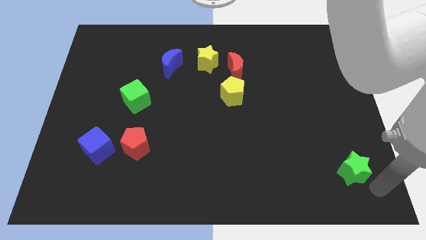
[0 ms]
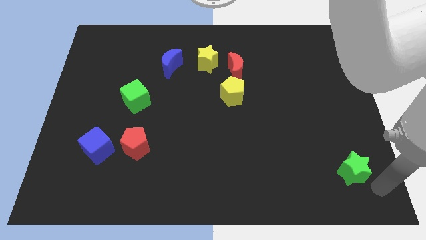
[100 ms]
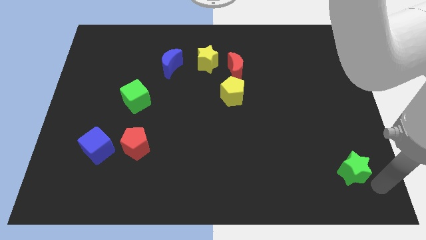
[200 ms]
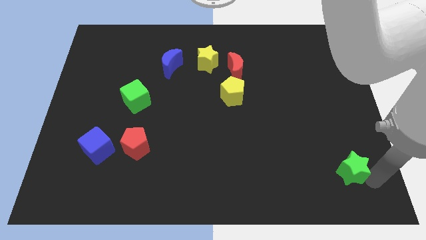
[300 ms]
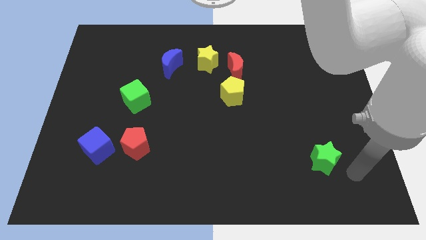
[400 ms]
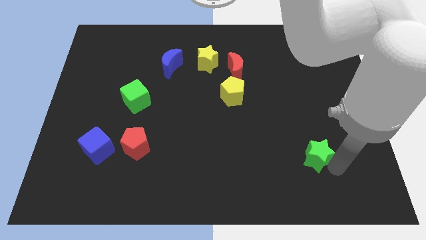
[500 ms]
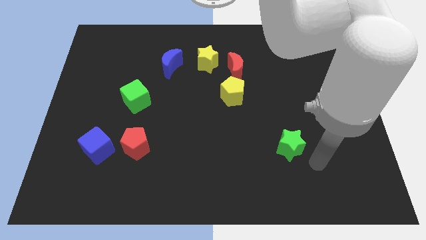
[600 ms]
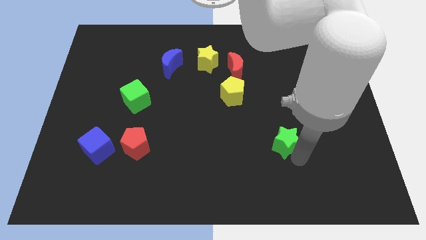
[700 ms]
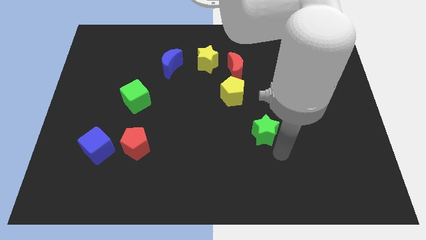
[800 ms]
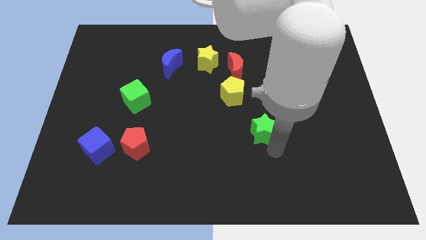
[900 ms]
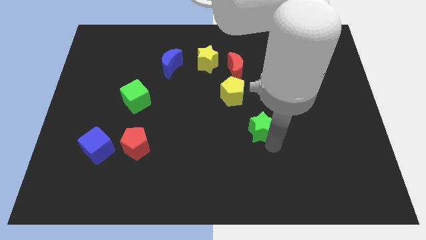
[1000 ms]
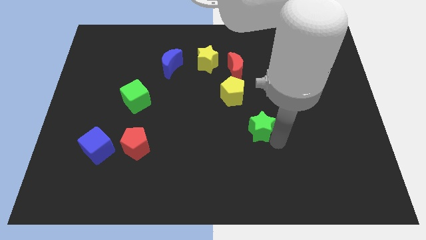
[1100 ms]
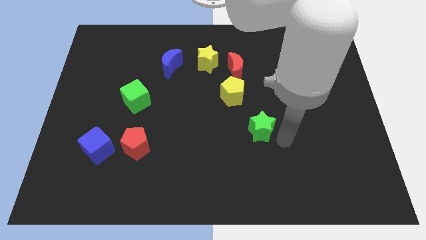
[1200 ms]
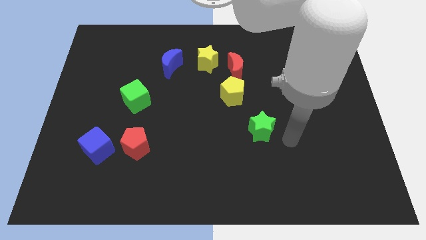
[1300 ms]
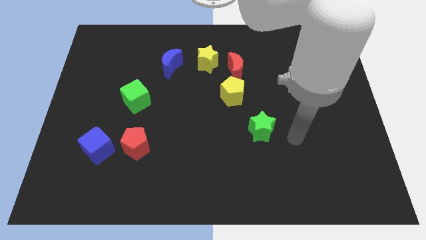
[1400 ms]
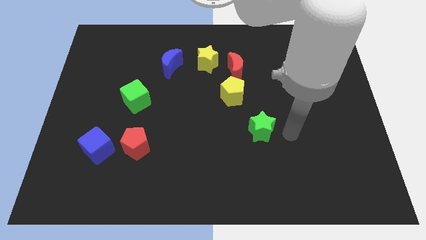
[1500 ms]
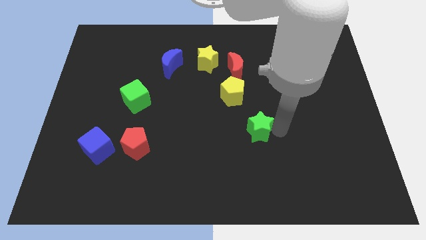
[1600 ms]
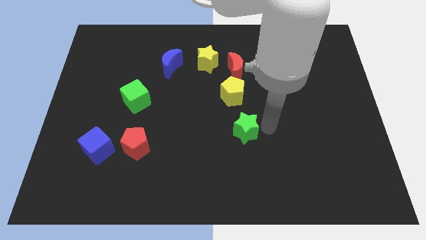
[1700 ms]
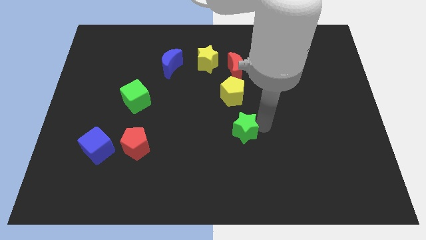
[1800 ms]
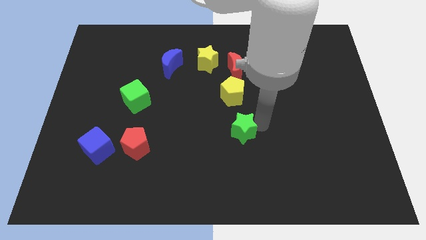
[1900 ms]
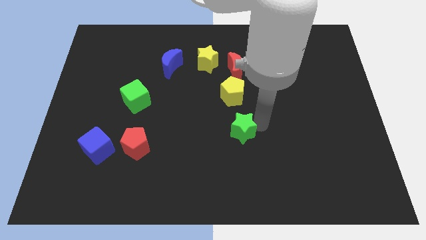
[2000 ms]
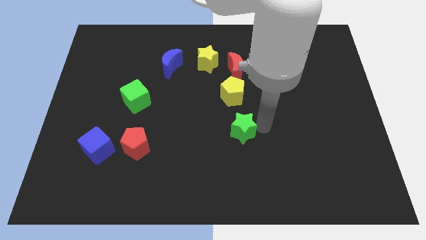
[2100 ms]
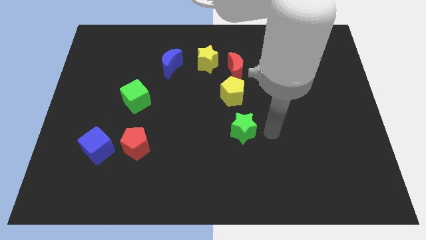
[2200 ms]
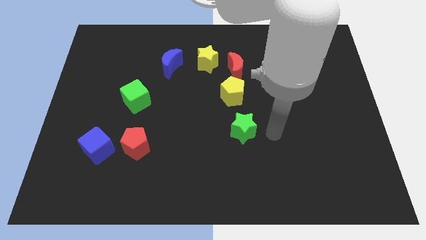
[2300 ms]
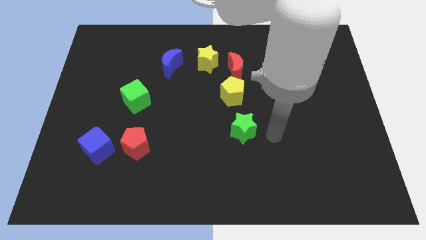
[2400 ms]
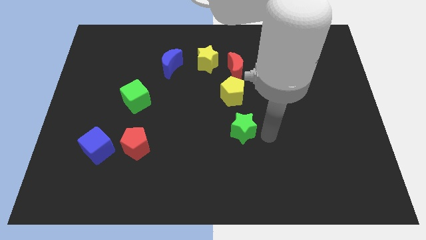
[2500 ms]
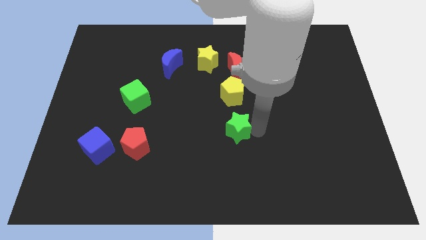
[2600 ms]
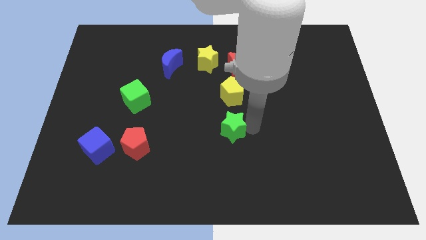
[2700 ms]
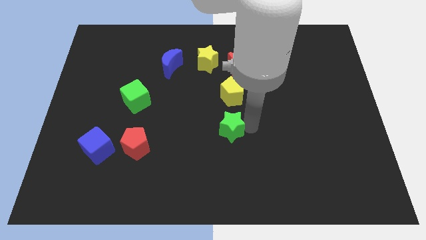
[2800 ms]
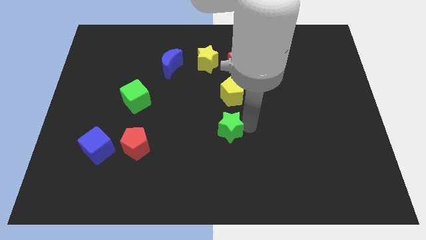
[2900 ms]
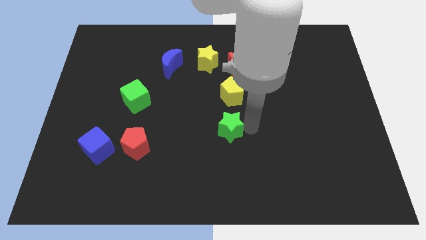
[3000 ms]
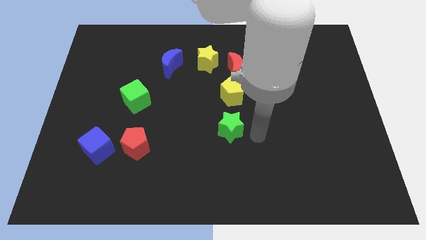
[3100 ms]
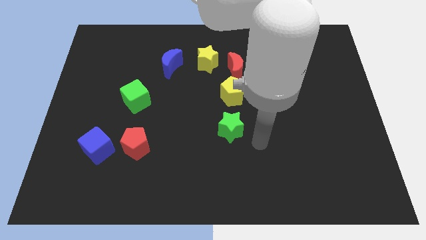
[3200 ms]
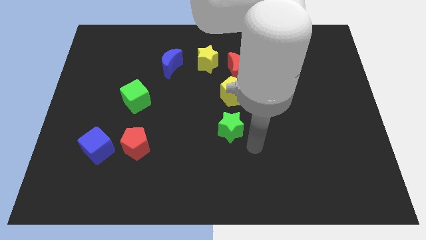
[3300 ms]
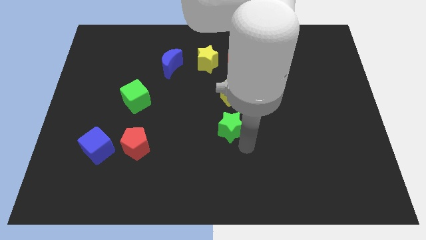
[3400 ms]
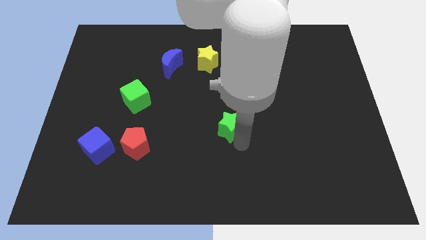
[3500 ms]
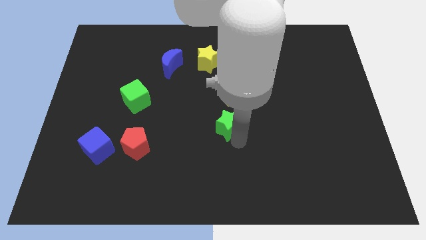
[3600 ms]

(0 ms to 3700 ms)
move the green star below the yello wpentagon

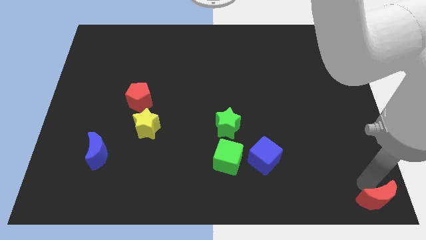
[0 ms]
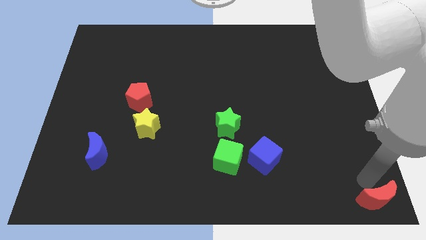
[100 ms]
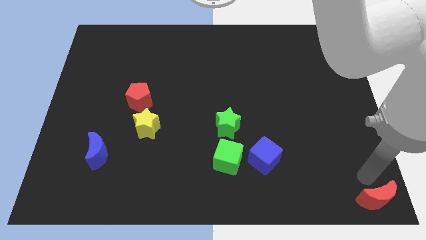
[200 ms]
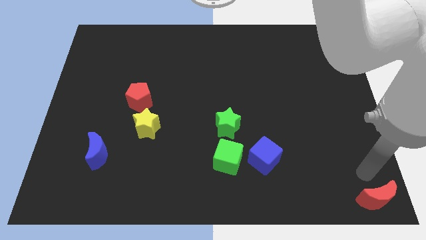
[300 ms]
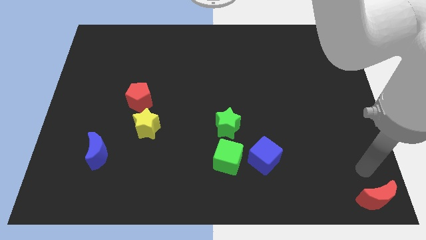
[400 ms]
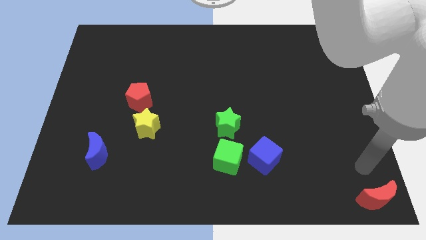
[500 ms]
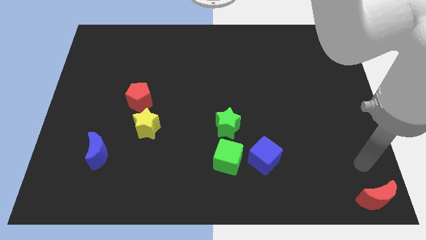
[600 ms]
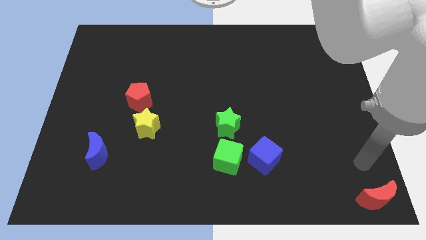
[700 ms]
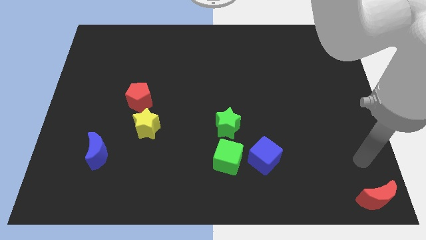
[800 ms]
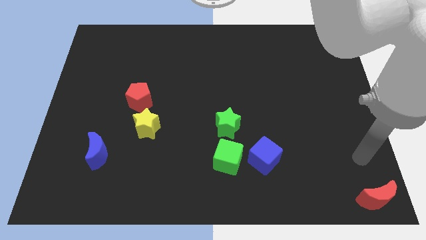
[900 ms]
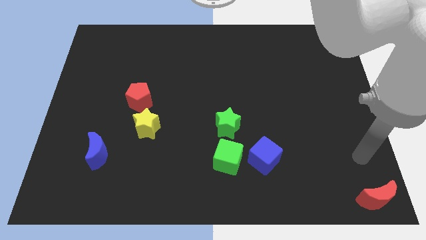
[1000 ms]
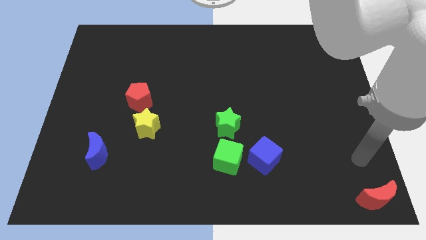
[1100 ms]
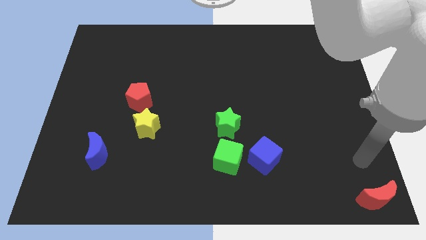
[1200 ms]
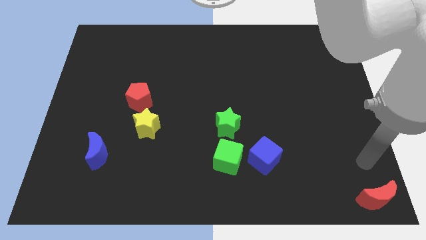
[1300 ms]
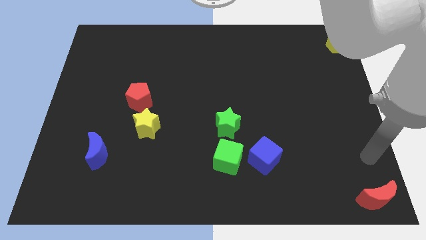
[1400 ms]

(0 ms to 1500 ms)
move arm away from red crescent

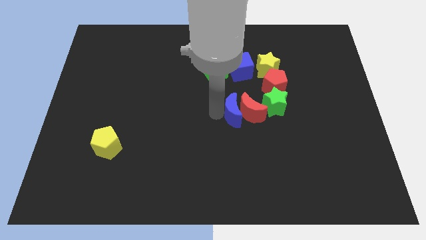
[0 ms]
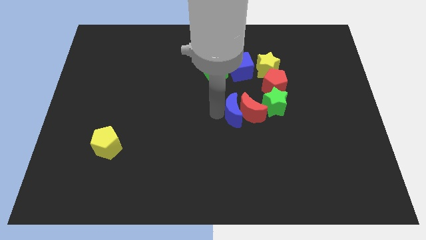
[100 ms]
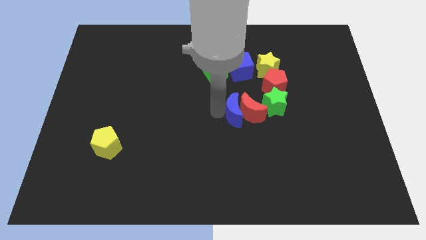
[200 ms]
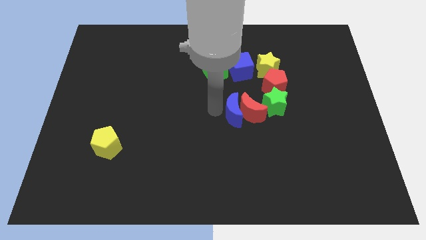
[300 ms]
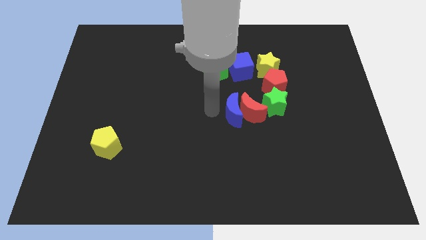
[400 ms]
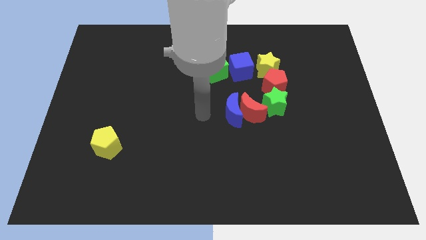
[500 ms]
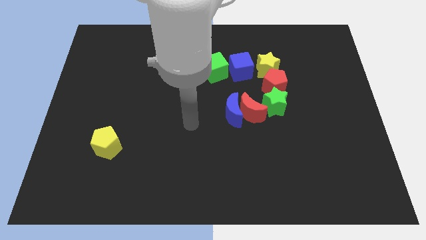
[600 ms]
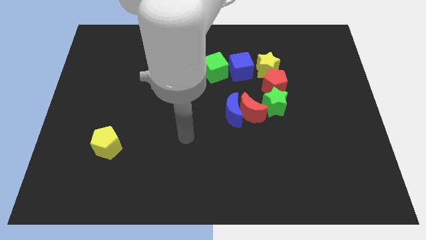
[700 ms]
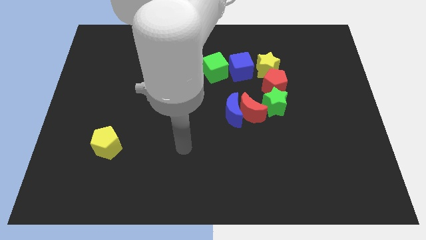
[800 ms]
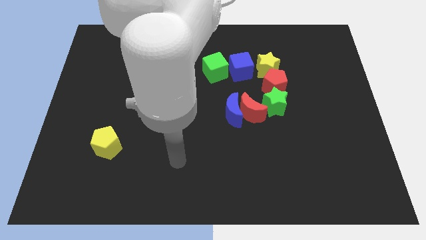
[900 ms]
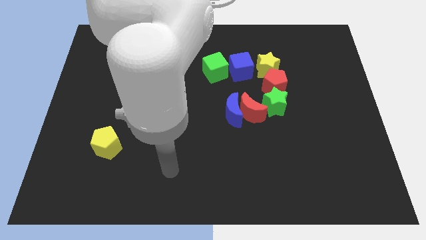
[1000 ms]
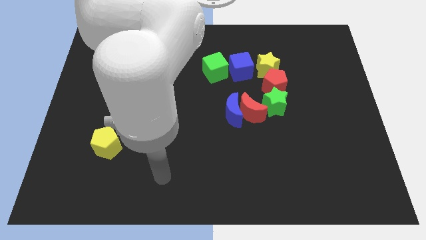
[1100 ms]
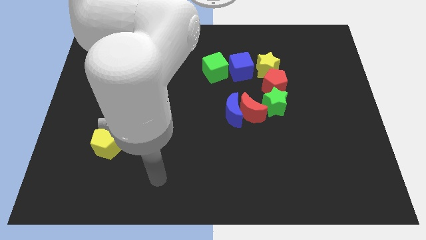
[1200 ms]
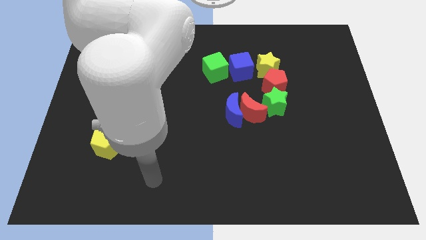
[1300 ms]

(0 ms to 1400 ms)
move your arm away from the left side of the blue moon

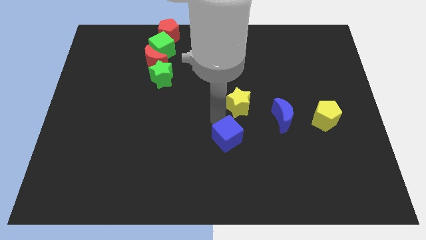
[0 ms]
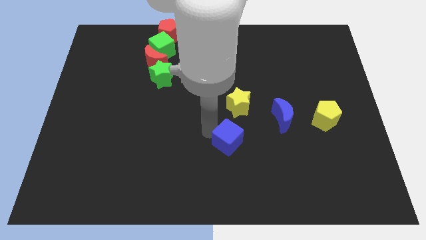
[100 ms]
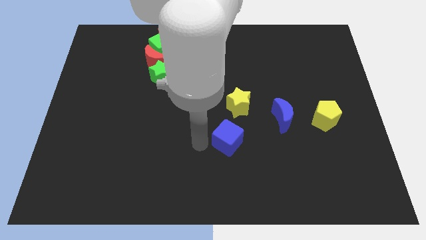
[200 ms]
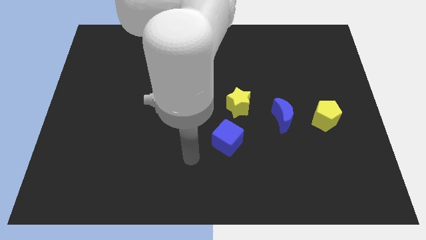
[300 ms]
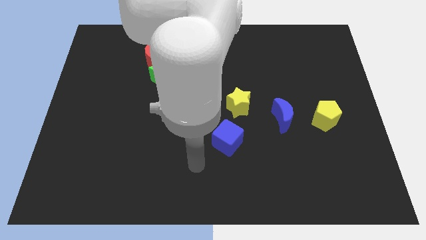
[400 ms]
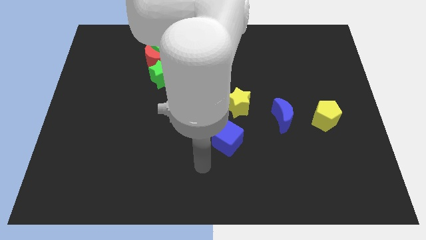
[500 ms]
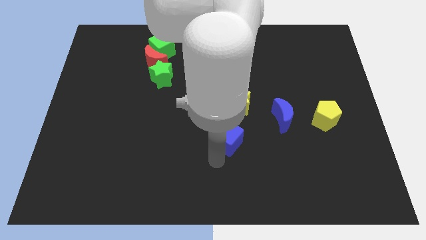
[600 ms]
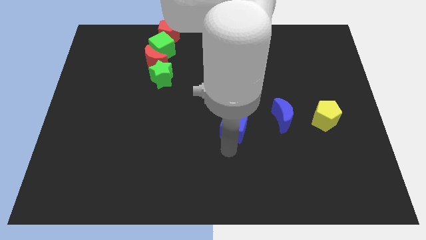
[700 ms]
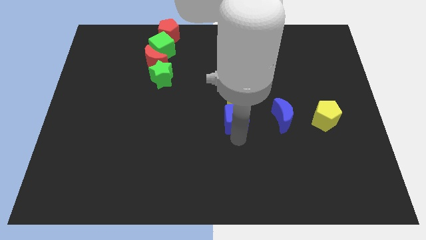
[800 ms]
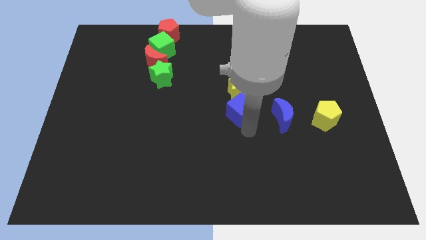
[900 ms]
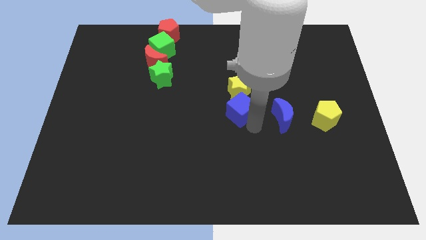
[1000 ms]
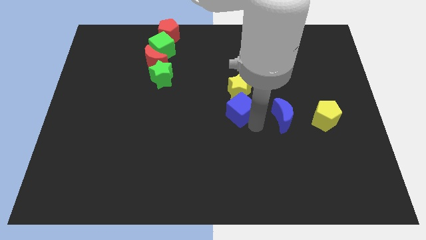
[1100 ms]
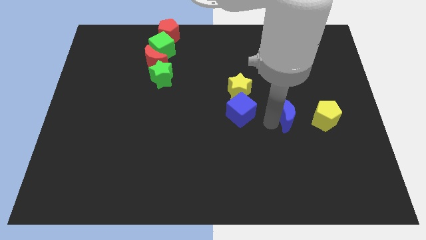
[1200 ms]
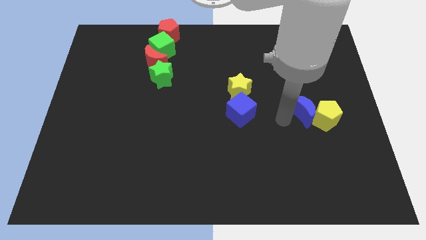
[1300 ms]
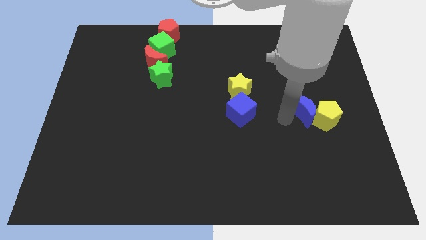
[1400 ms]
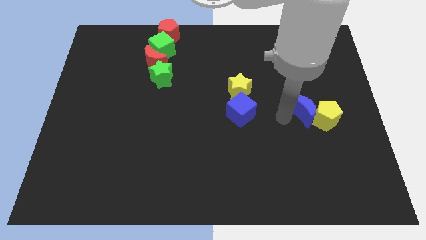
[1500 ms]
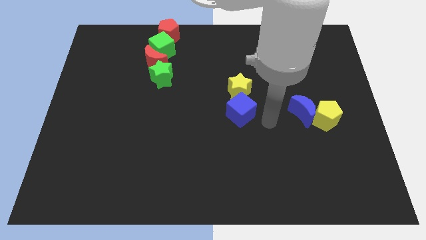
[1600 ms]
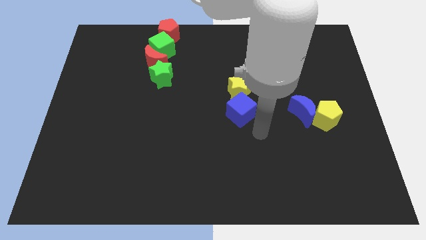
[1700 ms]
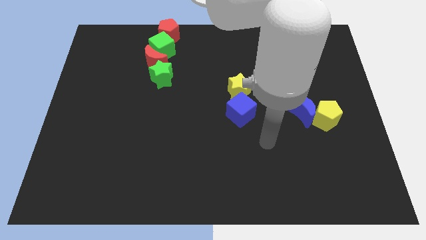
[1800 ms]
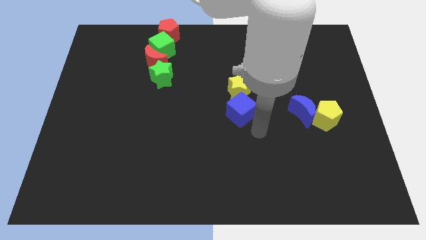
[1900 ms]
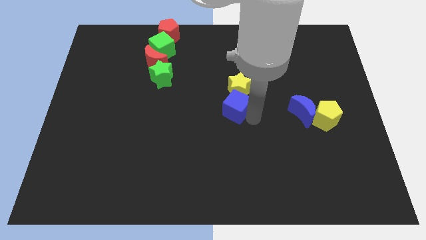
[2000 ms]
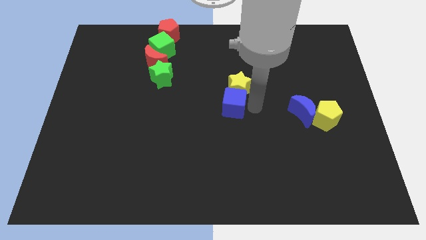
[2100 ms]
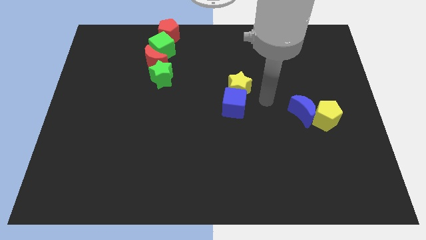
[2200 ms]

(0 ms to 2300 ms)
push yellow star and blue cube together slightly upwards

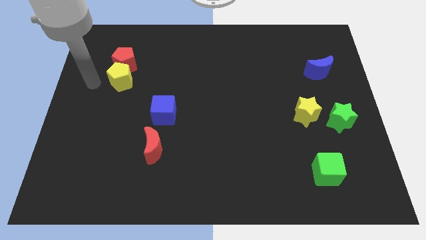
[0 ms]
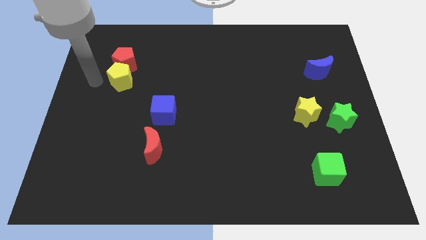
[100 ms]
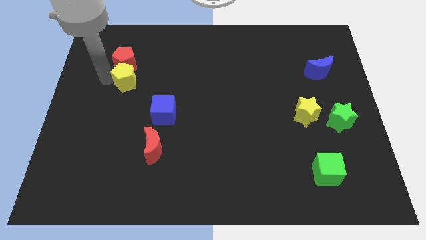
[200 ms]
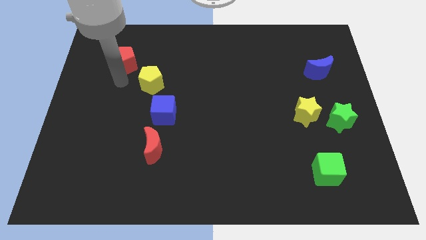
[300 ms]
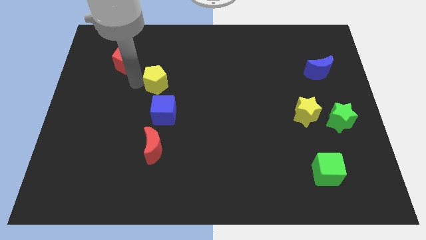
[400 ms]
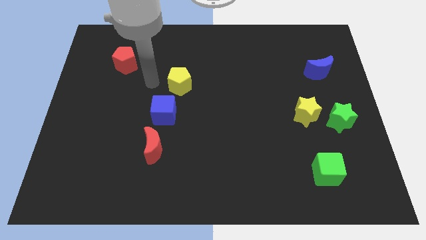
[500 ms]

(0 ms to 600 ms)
push yellow pentagon above blue cube
